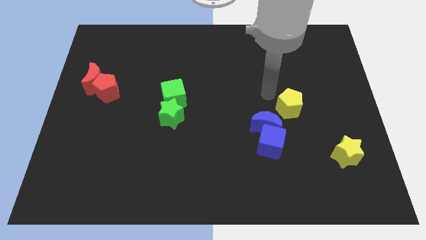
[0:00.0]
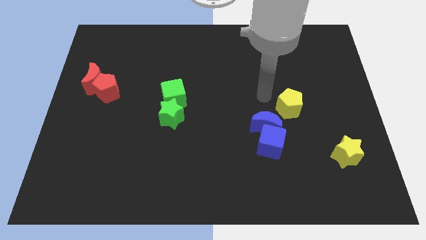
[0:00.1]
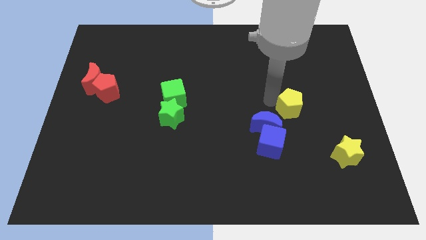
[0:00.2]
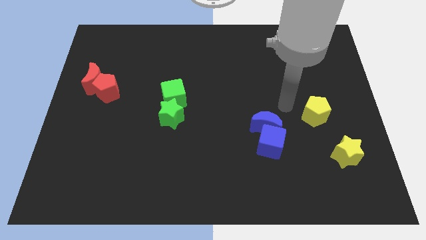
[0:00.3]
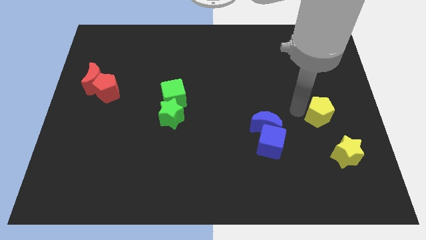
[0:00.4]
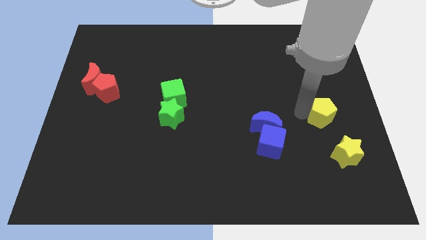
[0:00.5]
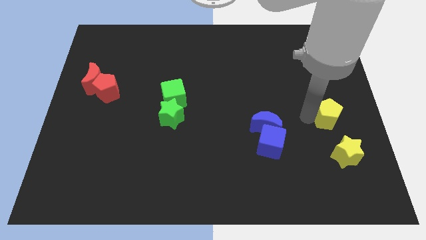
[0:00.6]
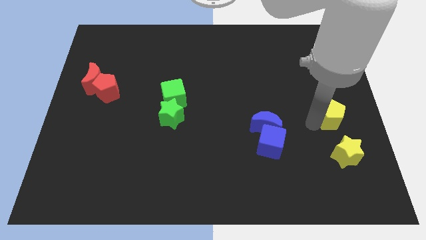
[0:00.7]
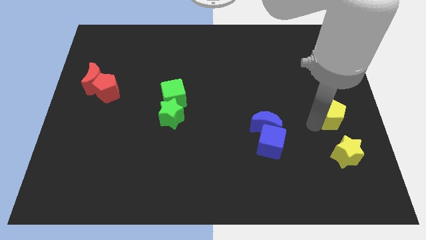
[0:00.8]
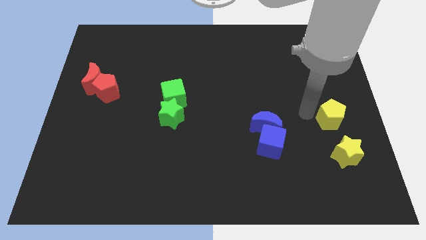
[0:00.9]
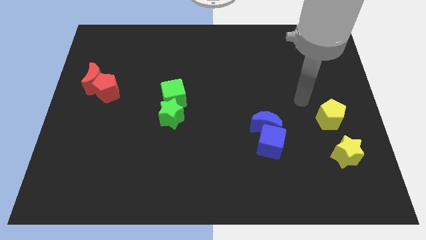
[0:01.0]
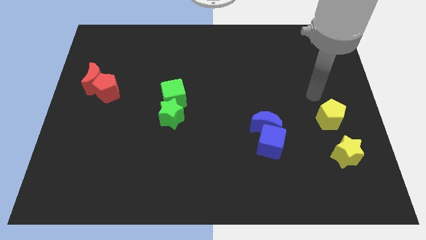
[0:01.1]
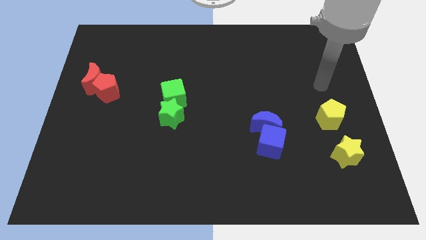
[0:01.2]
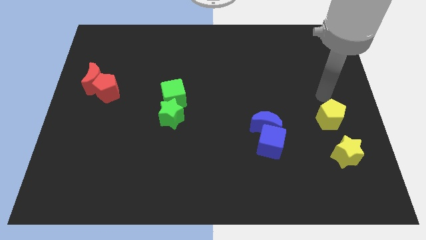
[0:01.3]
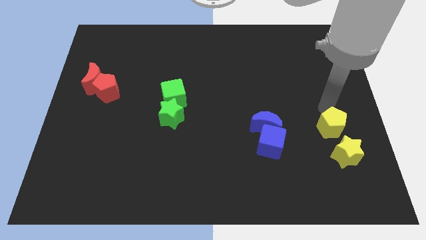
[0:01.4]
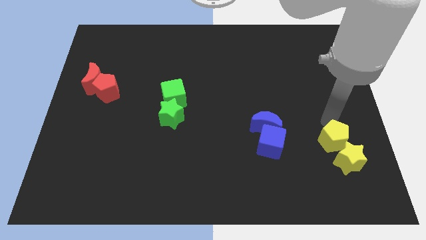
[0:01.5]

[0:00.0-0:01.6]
move the yellow pentagon into the yellow star

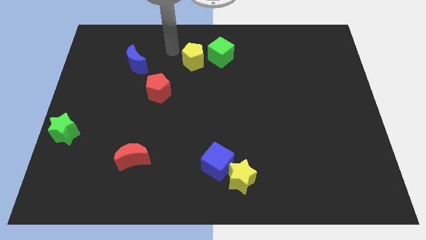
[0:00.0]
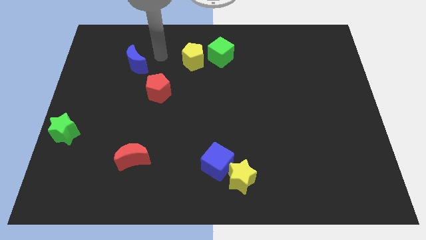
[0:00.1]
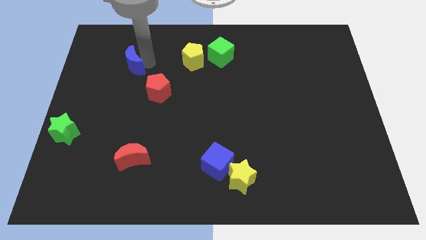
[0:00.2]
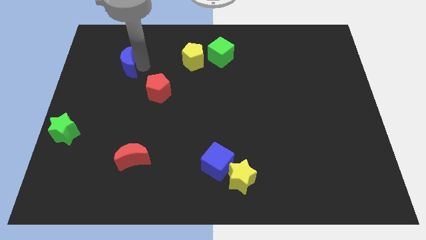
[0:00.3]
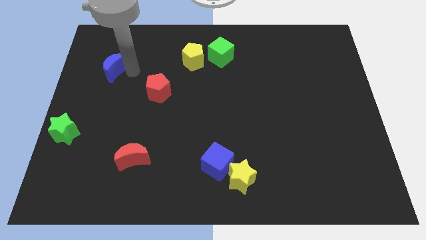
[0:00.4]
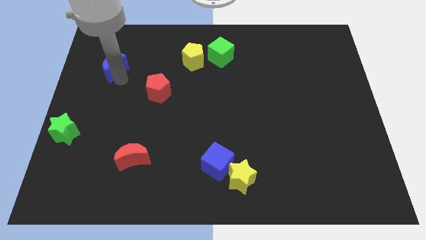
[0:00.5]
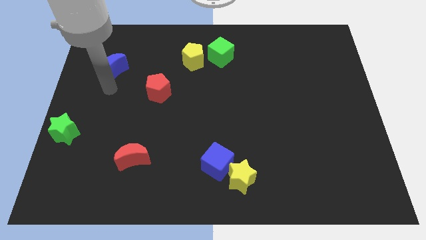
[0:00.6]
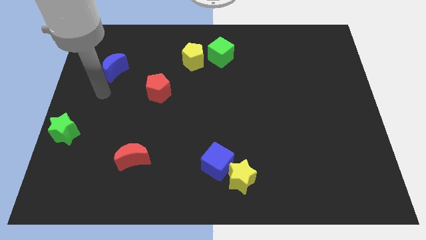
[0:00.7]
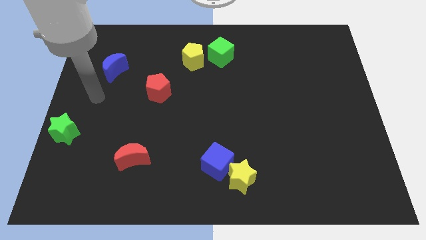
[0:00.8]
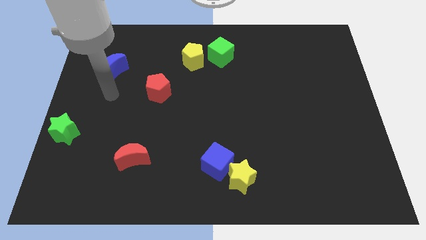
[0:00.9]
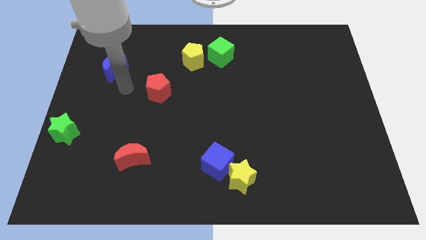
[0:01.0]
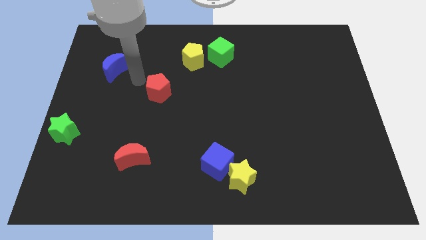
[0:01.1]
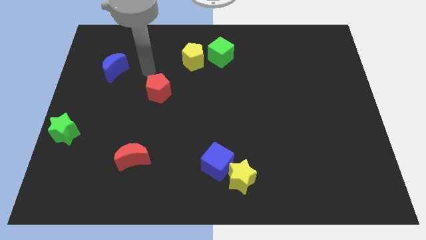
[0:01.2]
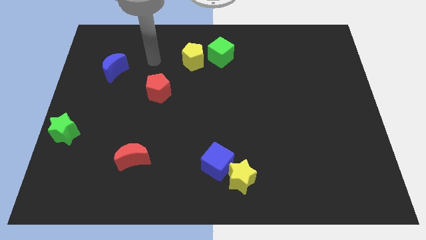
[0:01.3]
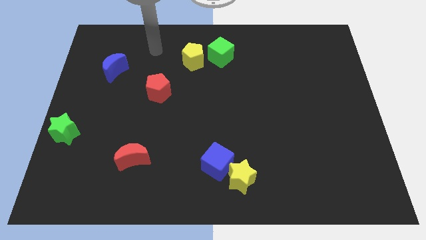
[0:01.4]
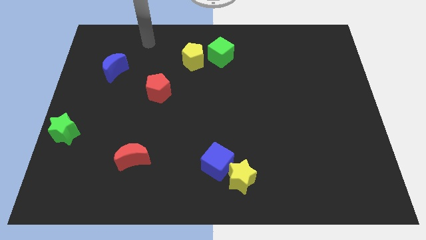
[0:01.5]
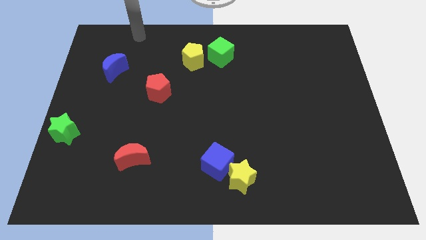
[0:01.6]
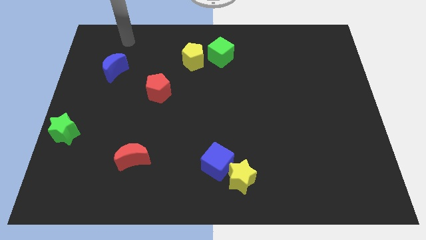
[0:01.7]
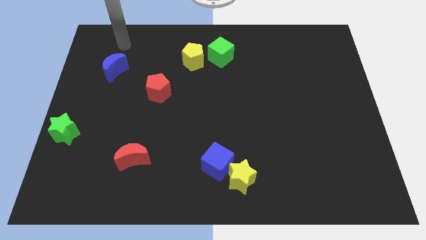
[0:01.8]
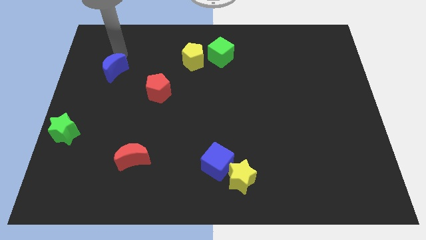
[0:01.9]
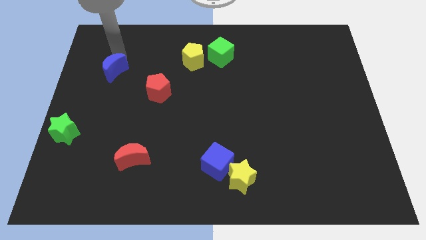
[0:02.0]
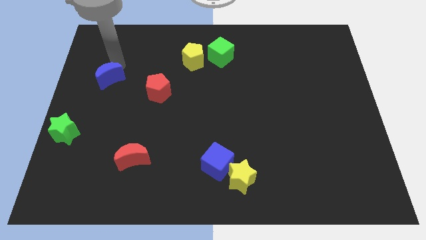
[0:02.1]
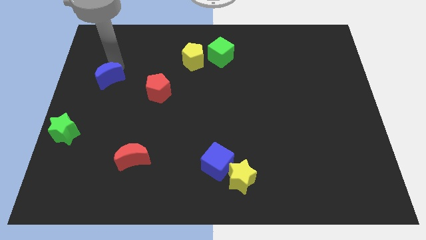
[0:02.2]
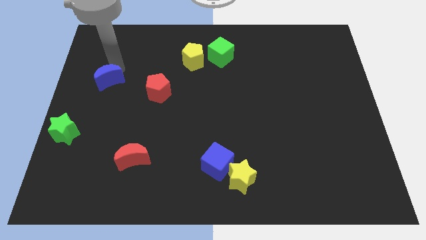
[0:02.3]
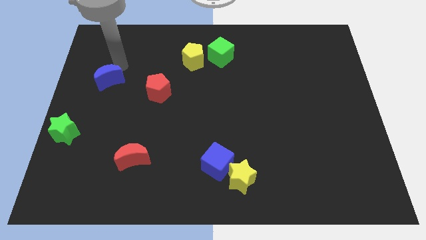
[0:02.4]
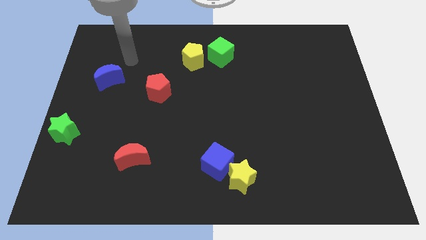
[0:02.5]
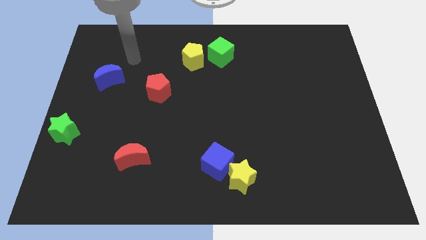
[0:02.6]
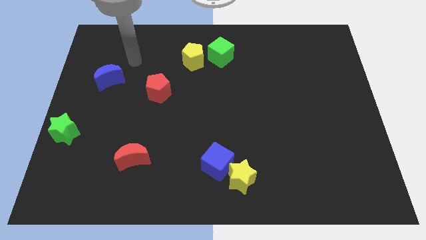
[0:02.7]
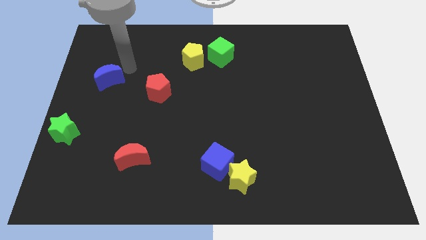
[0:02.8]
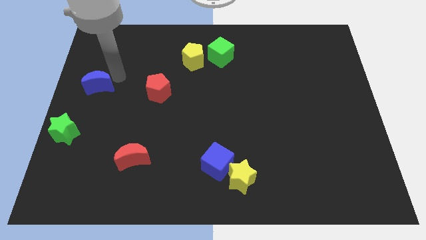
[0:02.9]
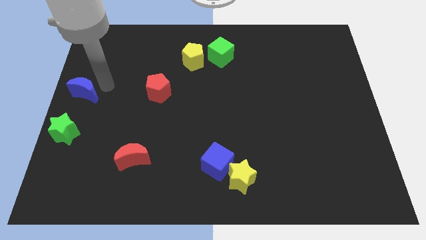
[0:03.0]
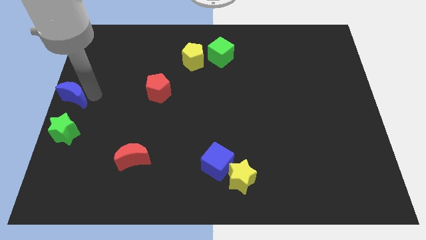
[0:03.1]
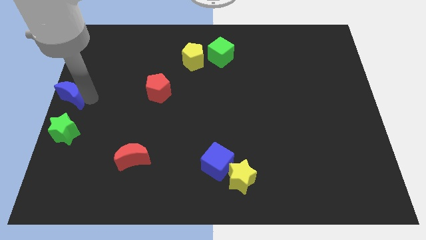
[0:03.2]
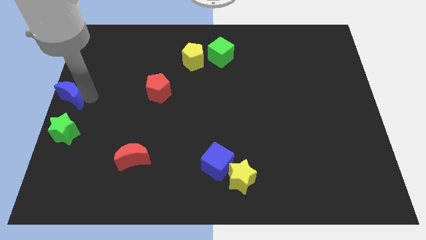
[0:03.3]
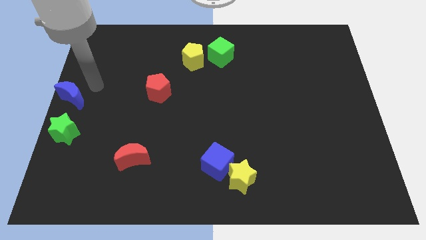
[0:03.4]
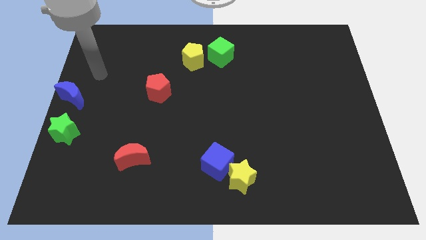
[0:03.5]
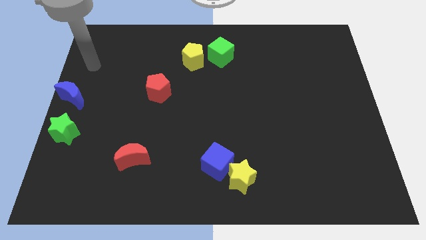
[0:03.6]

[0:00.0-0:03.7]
push blue crescent to the top of green star

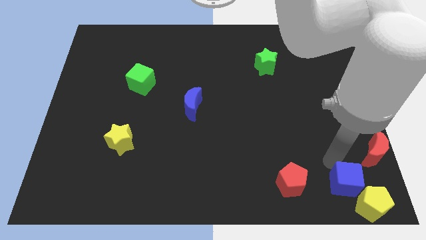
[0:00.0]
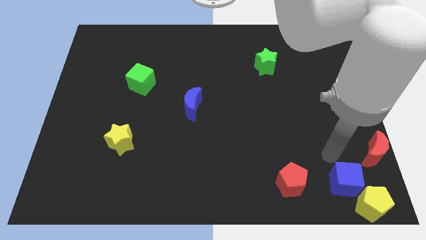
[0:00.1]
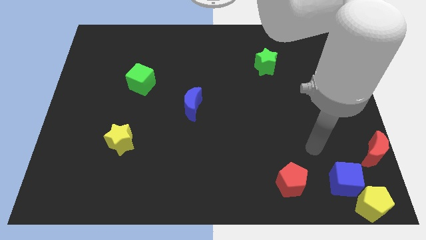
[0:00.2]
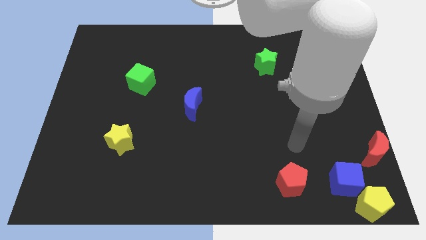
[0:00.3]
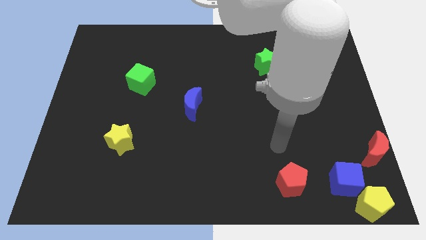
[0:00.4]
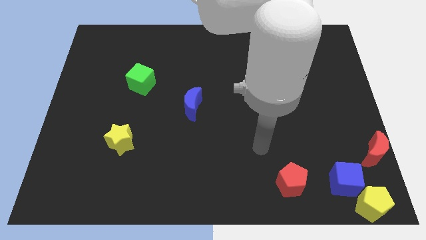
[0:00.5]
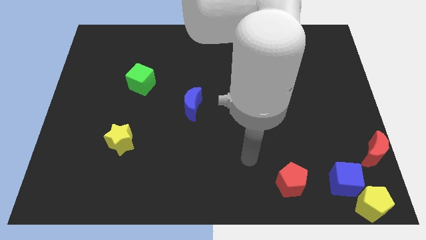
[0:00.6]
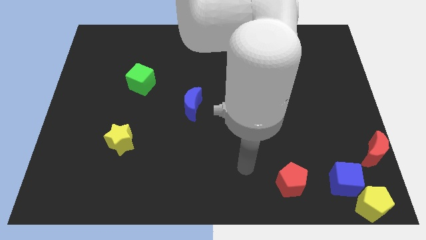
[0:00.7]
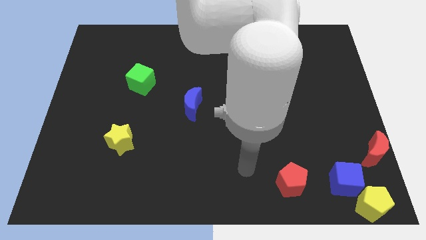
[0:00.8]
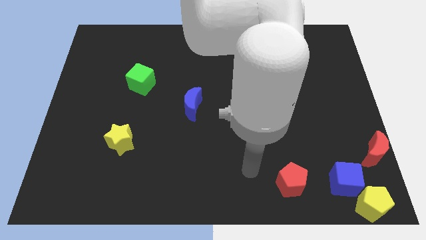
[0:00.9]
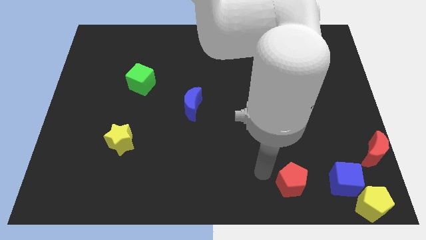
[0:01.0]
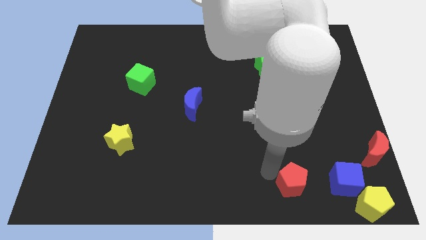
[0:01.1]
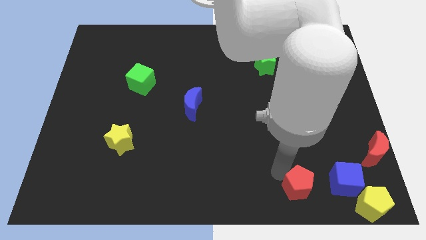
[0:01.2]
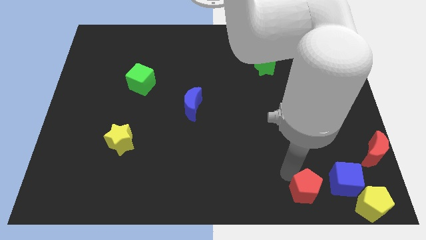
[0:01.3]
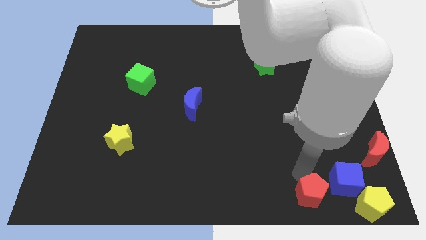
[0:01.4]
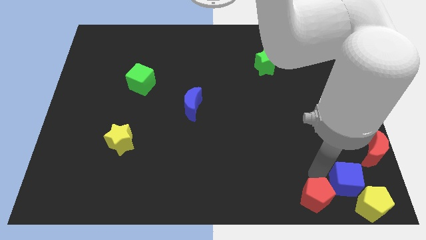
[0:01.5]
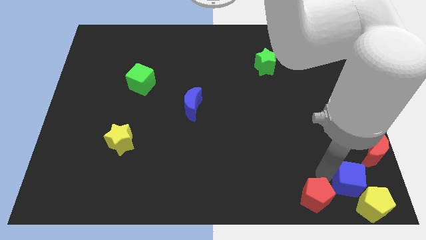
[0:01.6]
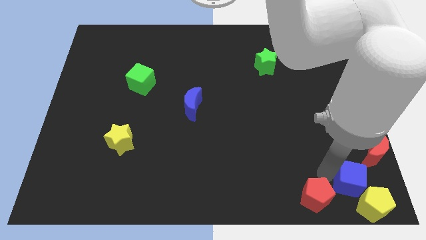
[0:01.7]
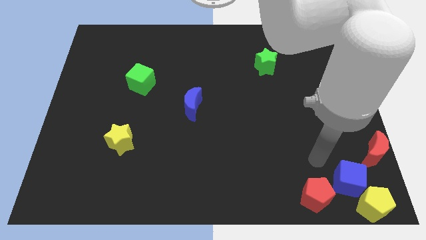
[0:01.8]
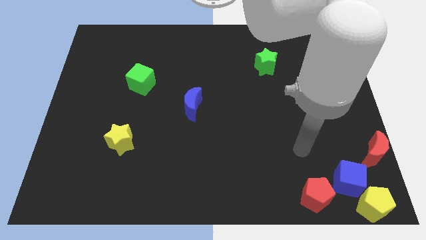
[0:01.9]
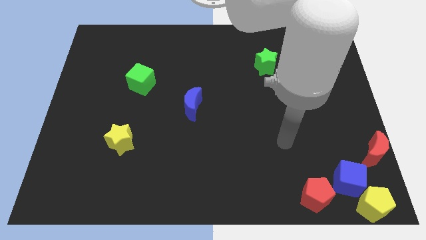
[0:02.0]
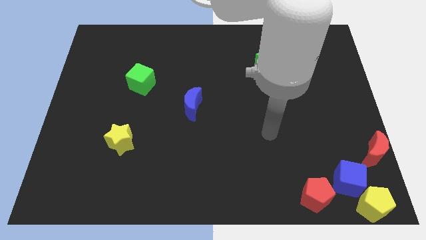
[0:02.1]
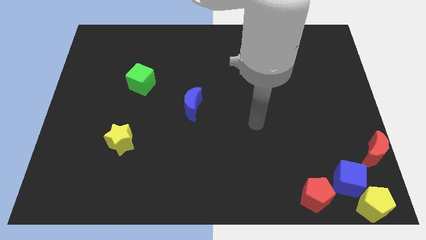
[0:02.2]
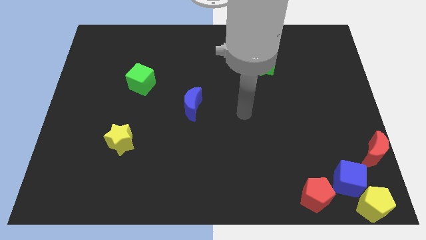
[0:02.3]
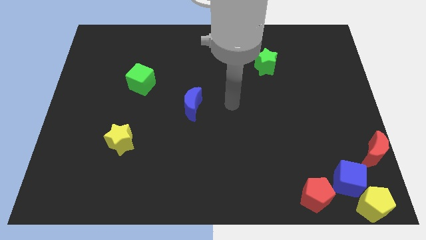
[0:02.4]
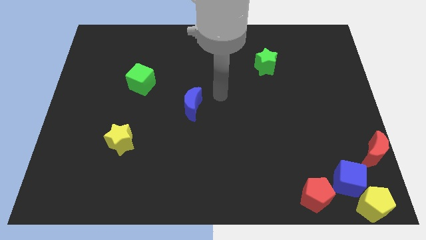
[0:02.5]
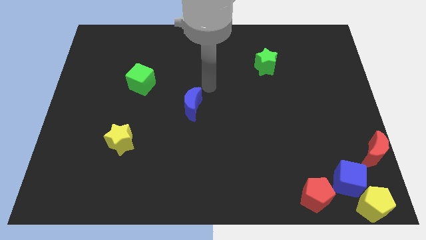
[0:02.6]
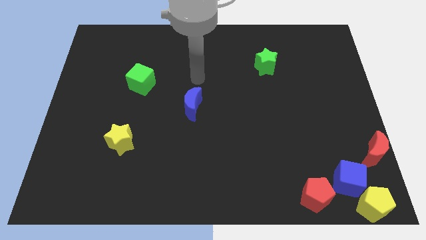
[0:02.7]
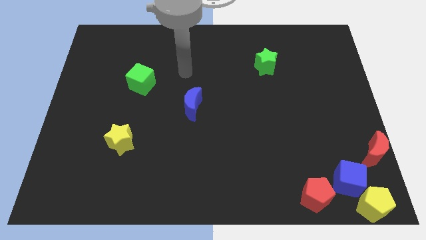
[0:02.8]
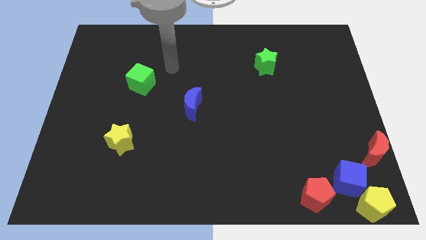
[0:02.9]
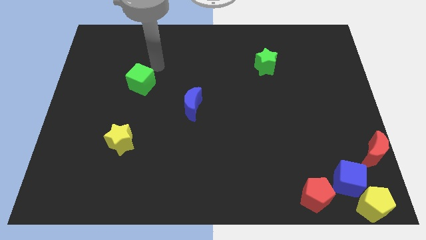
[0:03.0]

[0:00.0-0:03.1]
push the red pentagon close to the blue cube

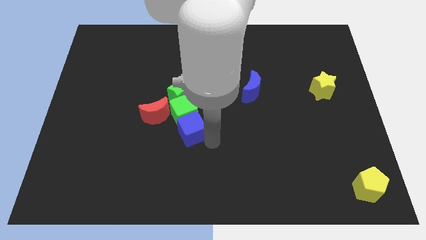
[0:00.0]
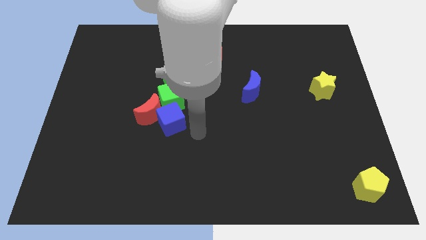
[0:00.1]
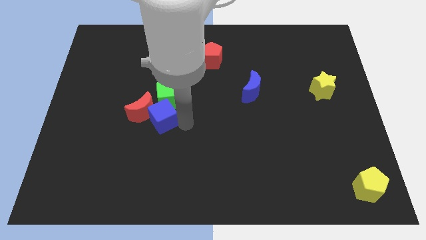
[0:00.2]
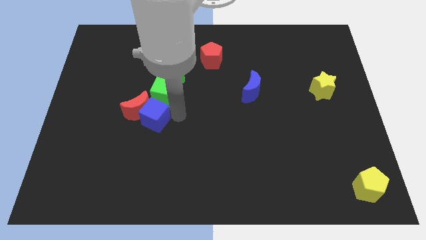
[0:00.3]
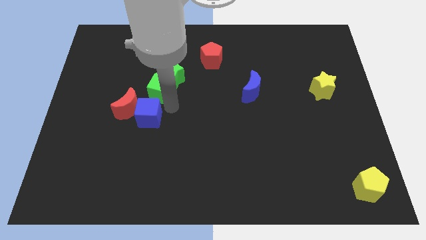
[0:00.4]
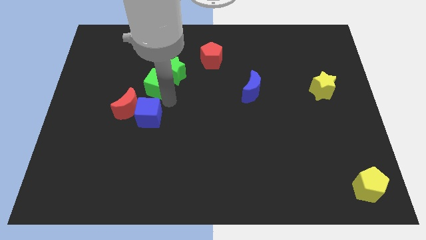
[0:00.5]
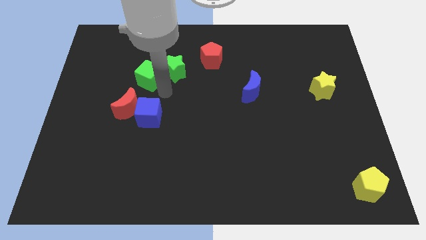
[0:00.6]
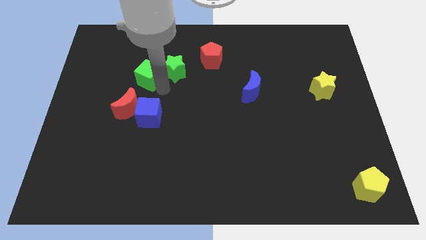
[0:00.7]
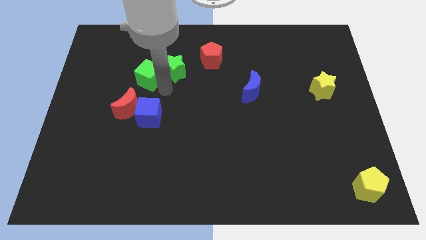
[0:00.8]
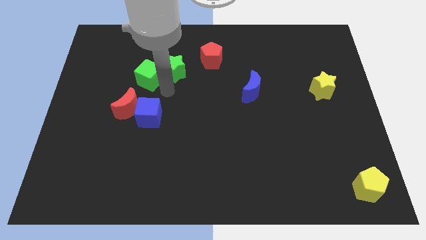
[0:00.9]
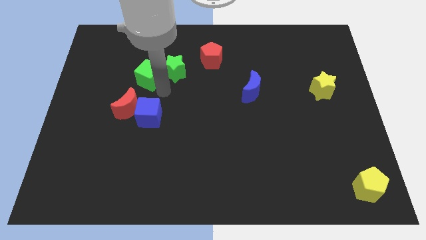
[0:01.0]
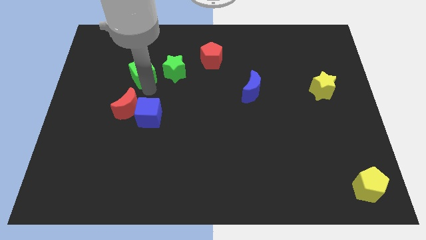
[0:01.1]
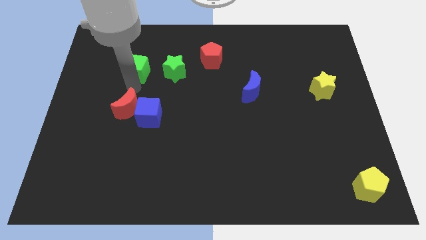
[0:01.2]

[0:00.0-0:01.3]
move the green cube to the left side of the green star
